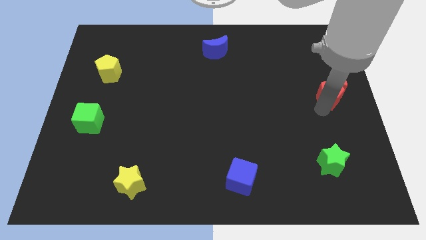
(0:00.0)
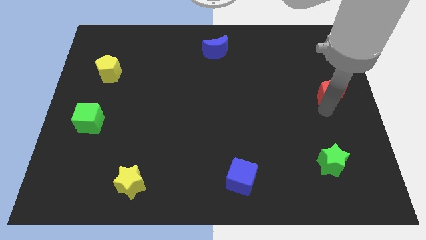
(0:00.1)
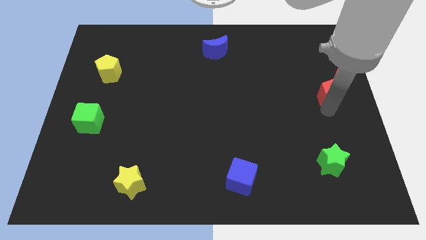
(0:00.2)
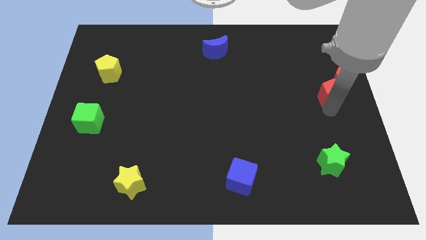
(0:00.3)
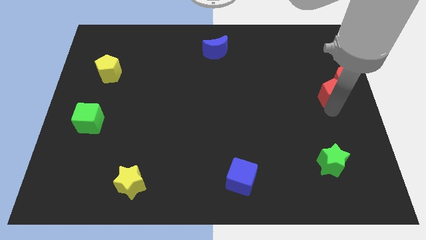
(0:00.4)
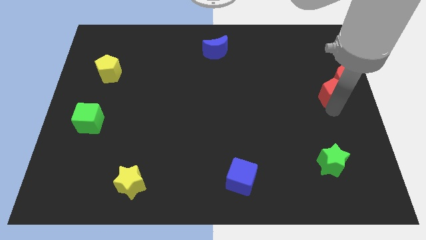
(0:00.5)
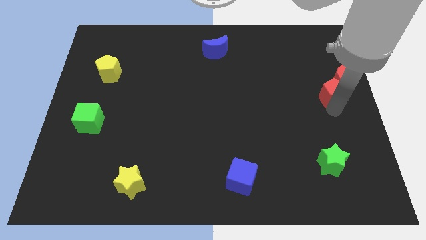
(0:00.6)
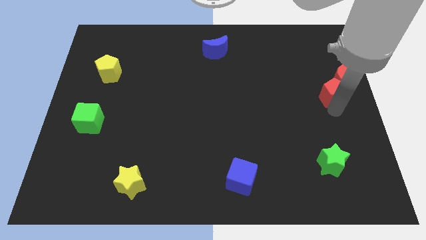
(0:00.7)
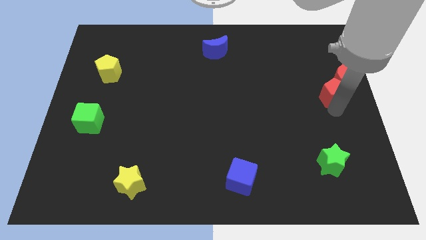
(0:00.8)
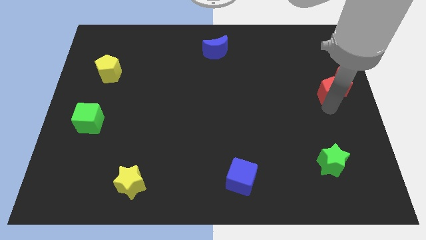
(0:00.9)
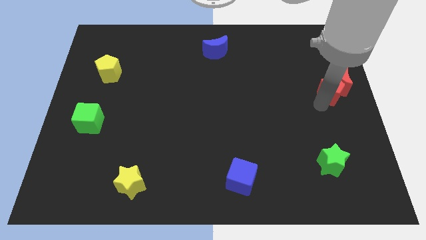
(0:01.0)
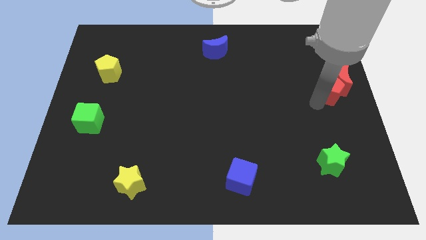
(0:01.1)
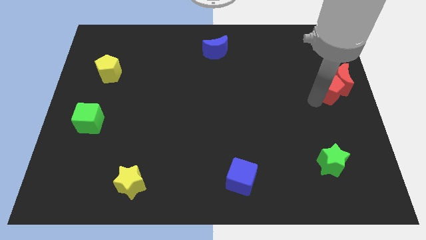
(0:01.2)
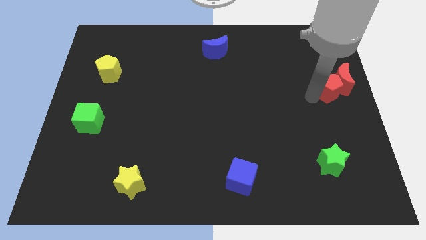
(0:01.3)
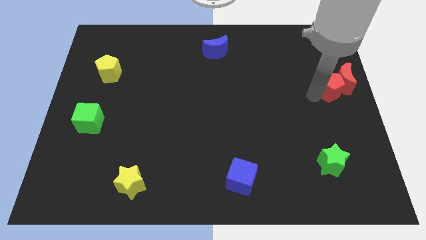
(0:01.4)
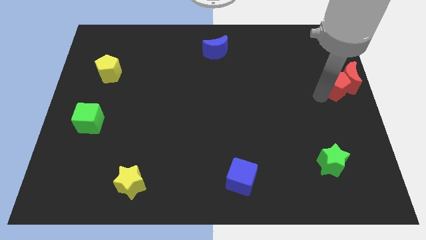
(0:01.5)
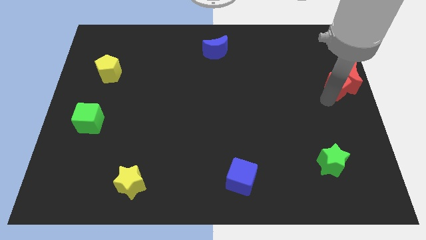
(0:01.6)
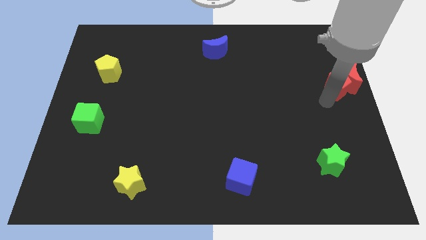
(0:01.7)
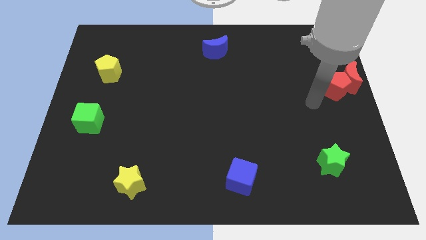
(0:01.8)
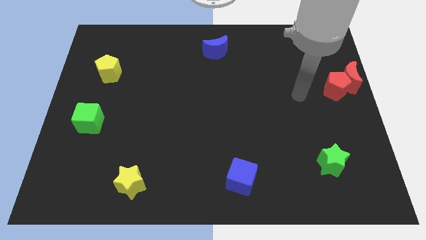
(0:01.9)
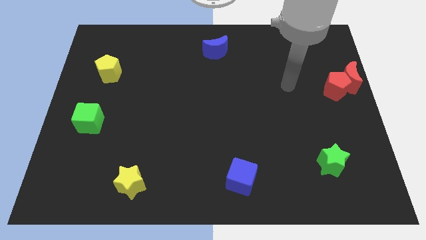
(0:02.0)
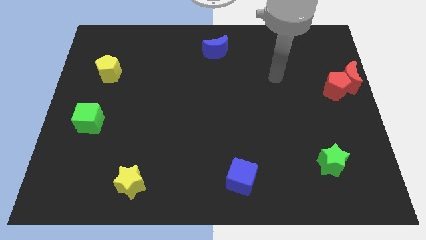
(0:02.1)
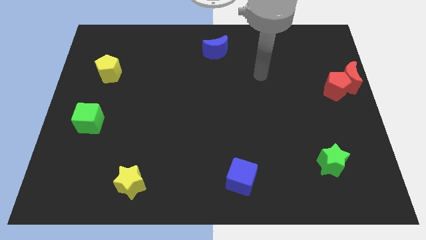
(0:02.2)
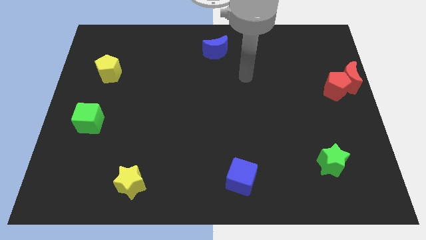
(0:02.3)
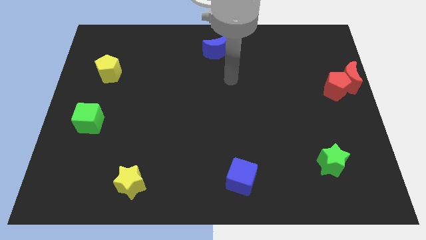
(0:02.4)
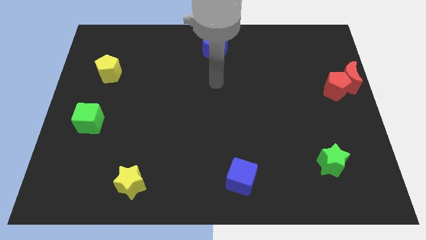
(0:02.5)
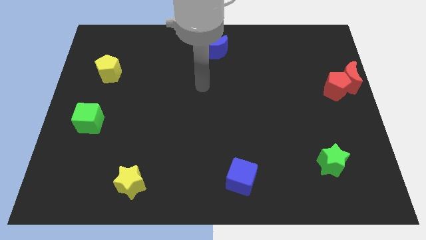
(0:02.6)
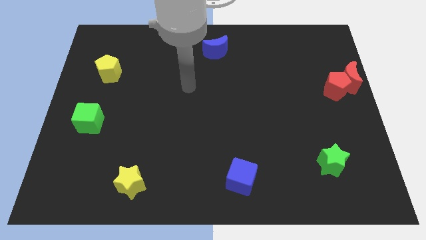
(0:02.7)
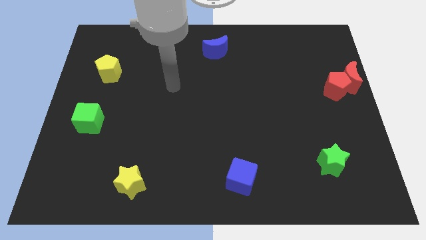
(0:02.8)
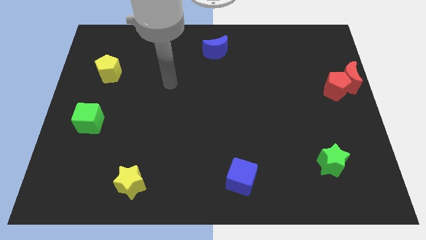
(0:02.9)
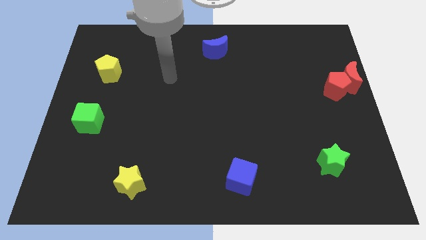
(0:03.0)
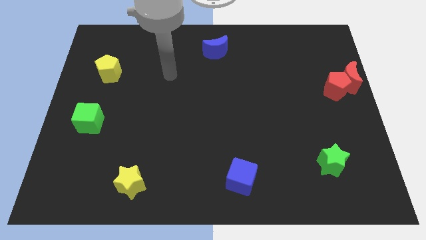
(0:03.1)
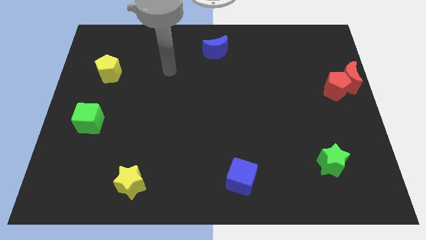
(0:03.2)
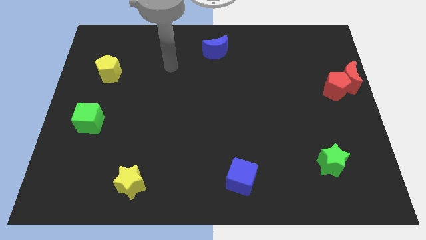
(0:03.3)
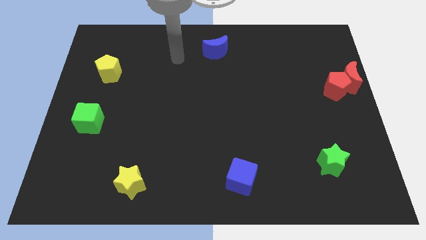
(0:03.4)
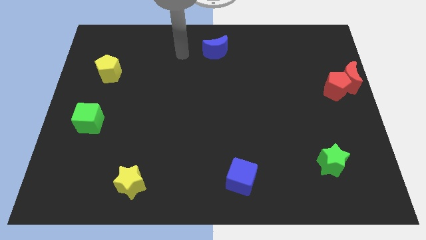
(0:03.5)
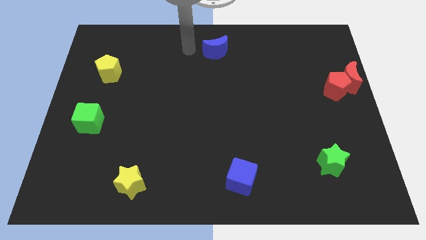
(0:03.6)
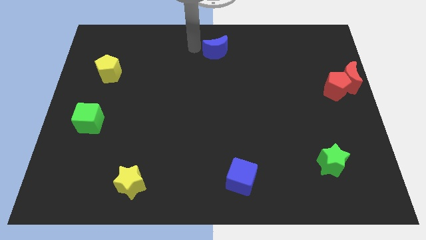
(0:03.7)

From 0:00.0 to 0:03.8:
slight push the red blocks to the right

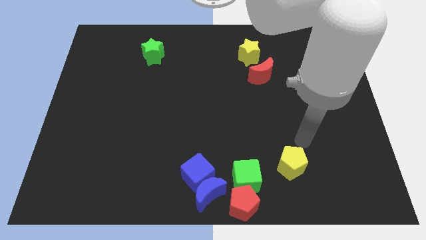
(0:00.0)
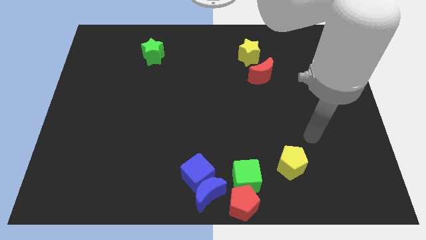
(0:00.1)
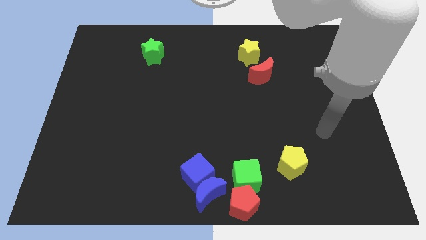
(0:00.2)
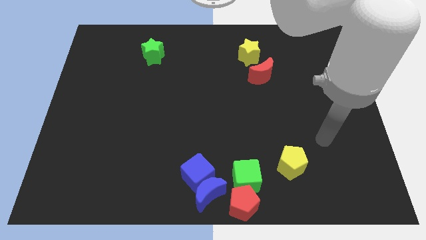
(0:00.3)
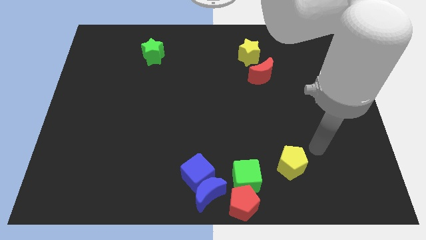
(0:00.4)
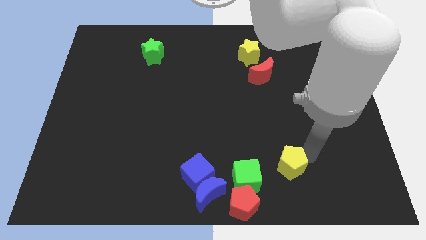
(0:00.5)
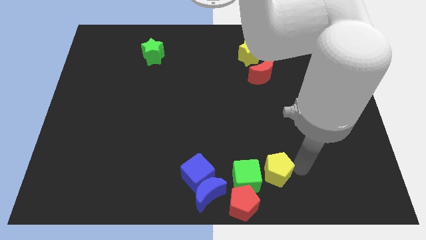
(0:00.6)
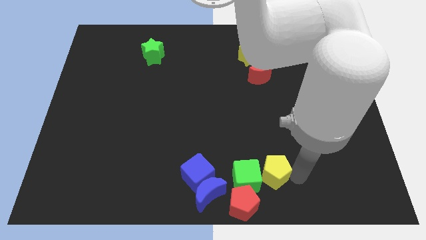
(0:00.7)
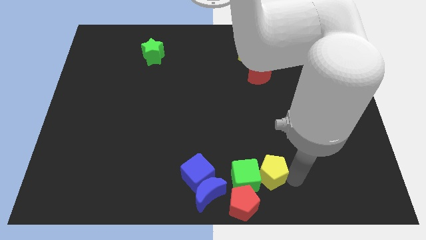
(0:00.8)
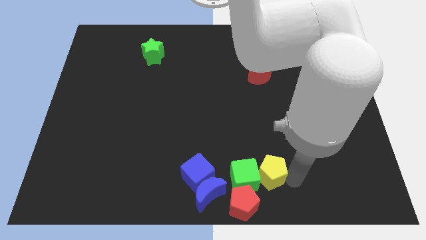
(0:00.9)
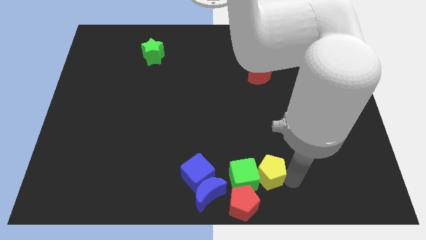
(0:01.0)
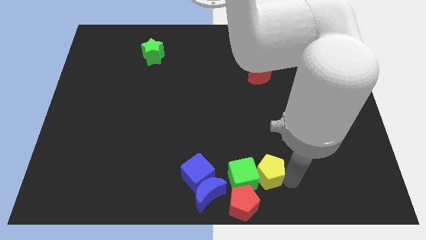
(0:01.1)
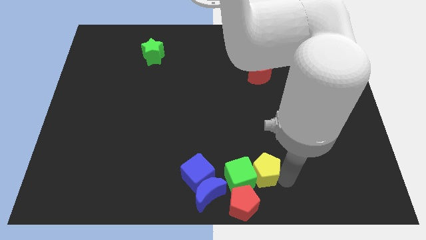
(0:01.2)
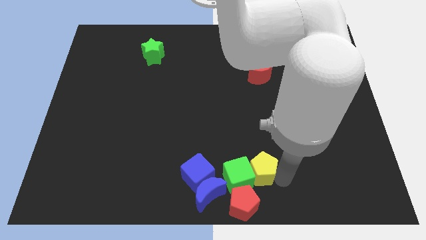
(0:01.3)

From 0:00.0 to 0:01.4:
push the yellow pentagon to the right of the green cube

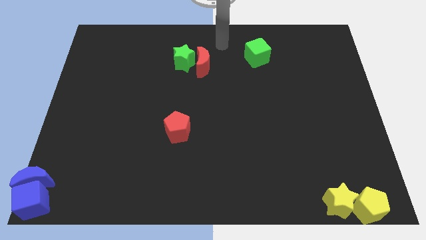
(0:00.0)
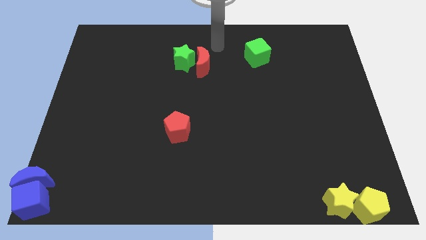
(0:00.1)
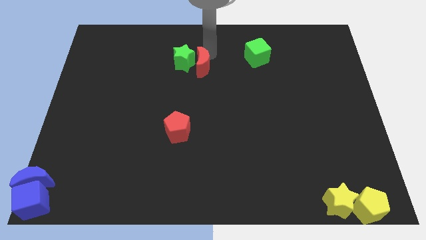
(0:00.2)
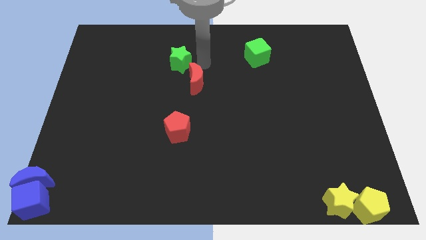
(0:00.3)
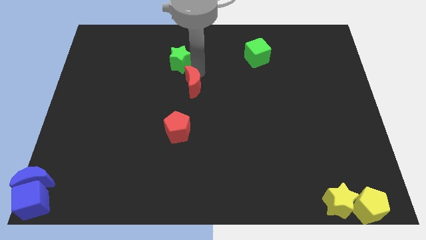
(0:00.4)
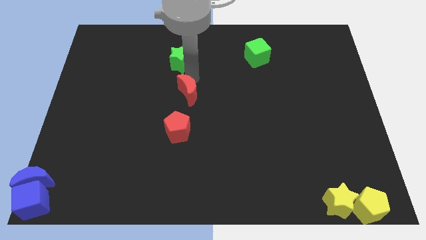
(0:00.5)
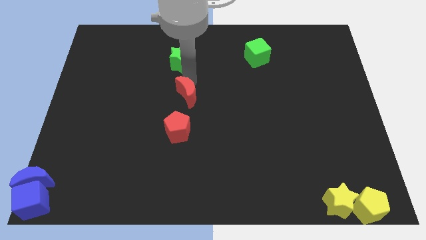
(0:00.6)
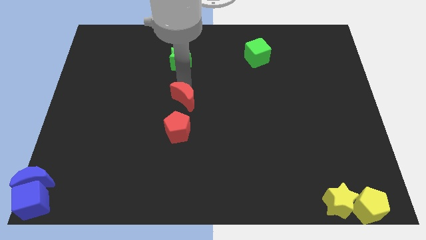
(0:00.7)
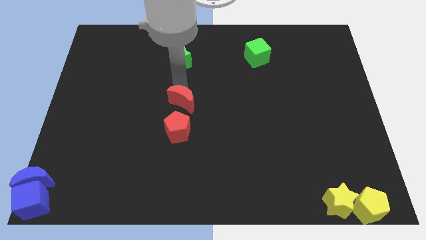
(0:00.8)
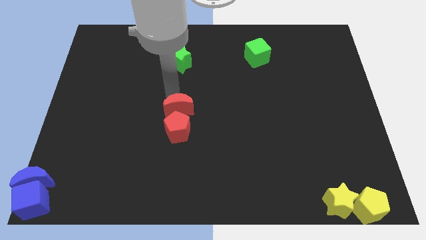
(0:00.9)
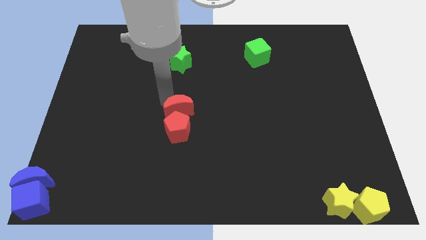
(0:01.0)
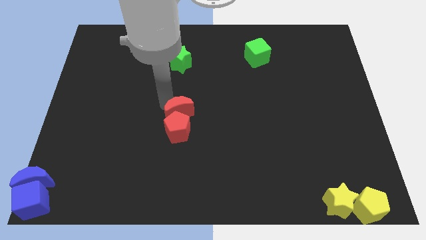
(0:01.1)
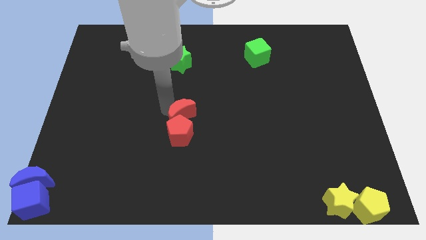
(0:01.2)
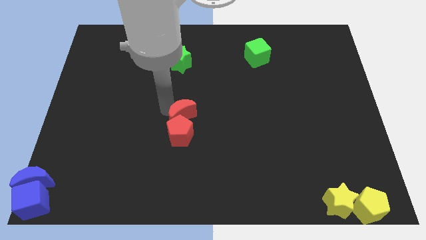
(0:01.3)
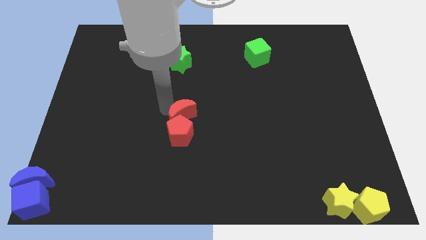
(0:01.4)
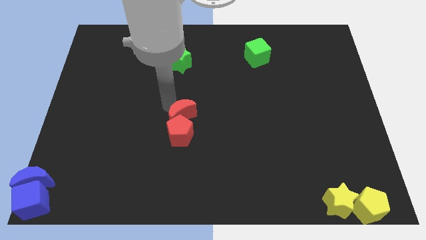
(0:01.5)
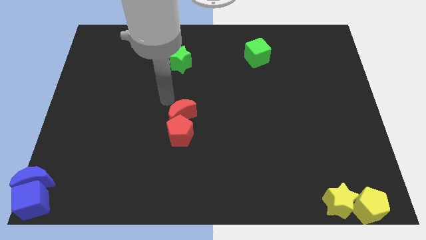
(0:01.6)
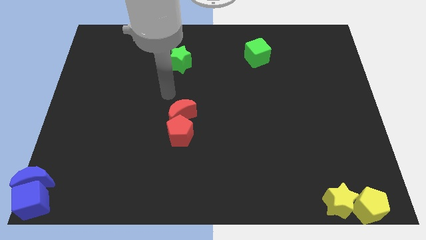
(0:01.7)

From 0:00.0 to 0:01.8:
push the red crescent into the red pentagon

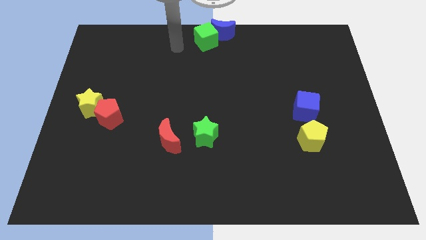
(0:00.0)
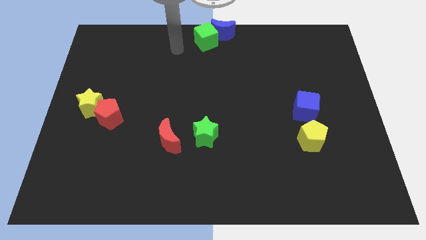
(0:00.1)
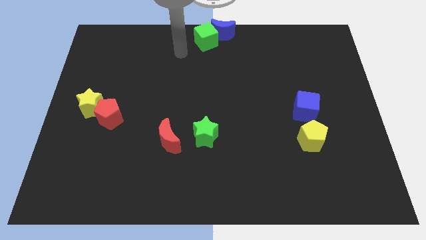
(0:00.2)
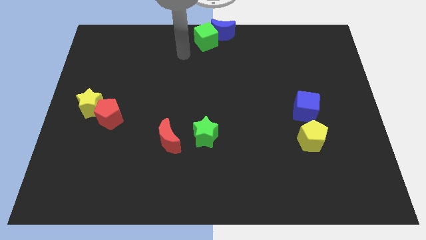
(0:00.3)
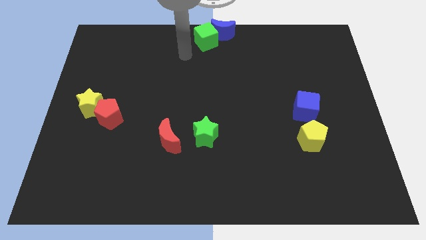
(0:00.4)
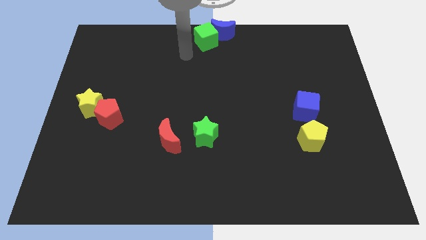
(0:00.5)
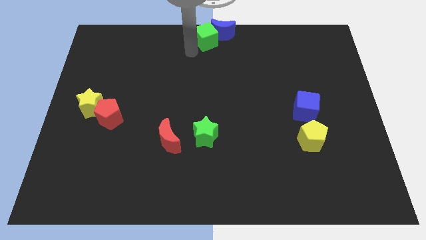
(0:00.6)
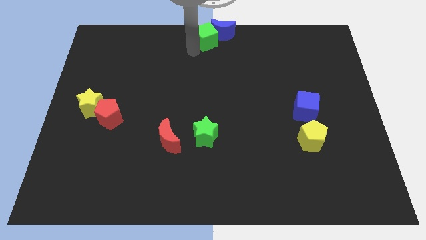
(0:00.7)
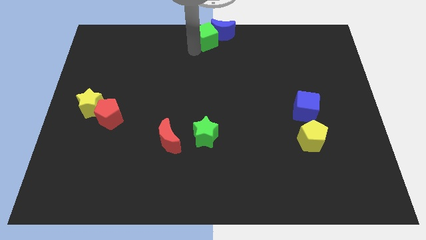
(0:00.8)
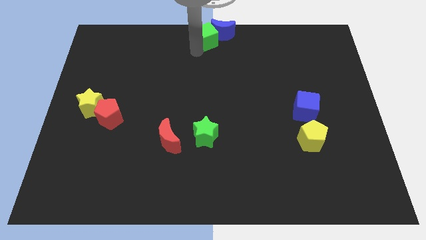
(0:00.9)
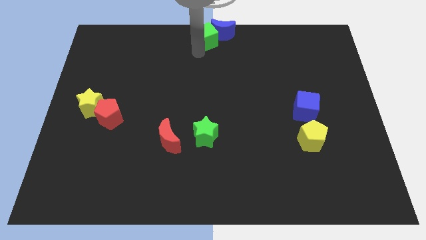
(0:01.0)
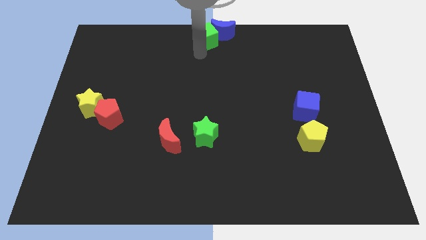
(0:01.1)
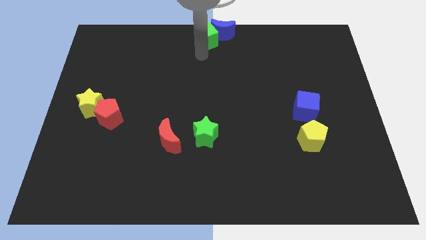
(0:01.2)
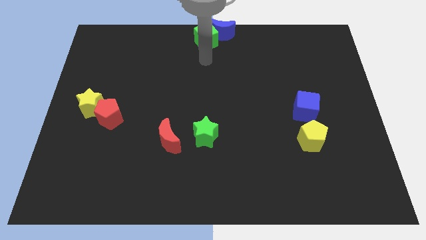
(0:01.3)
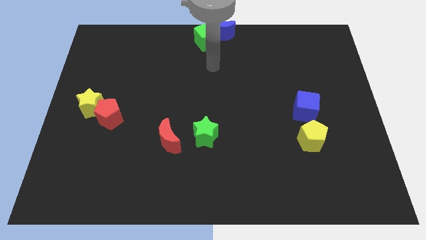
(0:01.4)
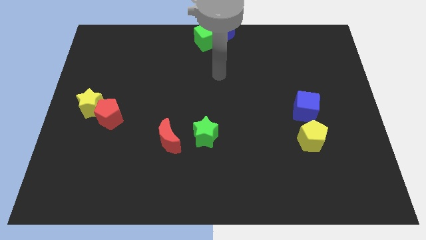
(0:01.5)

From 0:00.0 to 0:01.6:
move your arm away from green cube

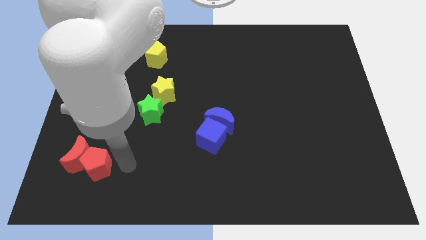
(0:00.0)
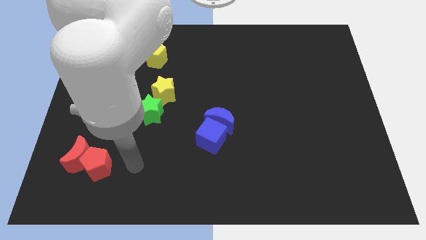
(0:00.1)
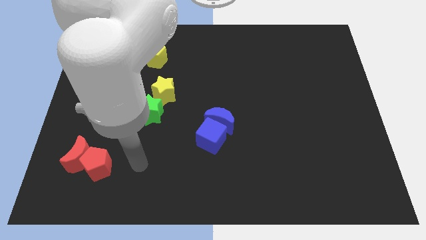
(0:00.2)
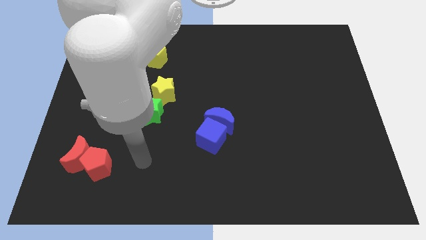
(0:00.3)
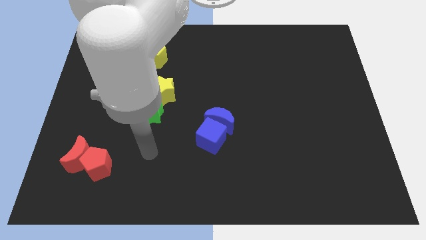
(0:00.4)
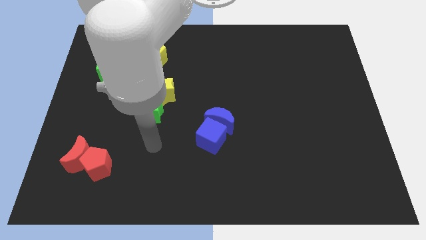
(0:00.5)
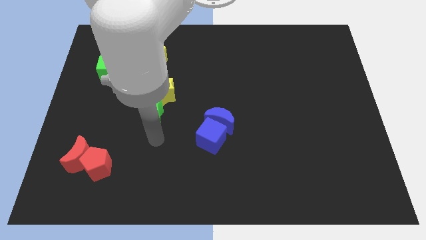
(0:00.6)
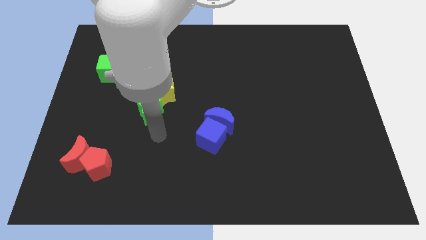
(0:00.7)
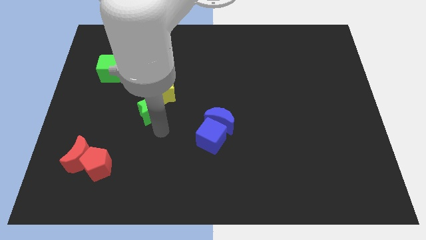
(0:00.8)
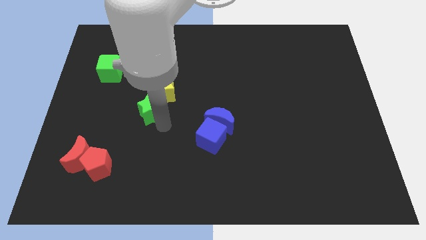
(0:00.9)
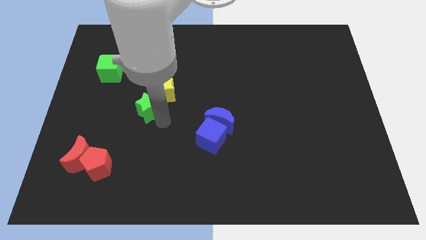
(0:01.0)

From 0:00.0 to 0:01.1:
touch the bottom right side of the green star
